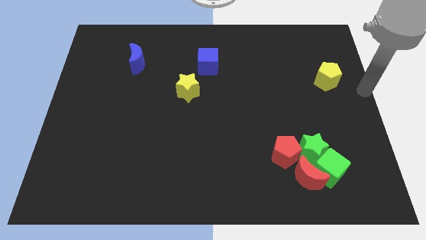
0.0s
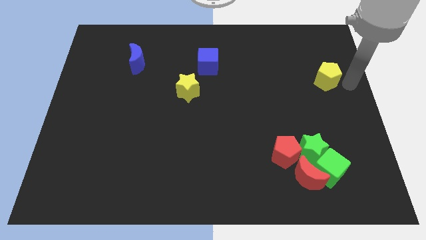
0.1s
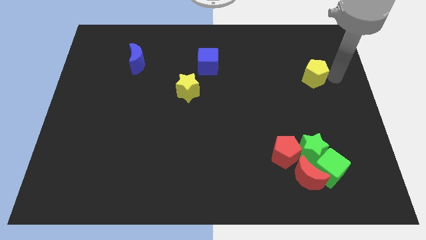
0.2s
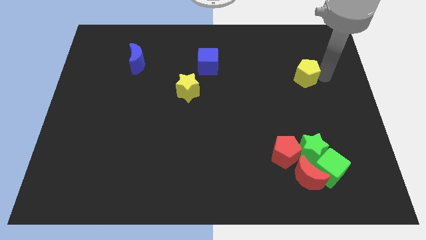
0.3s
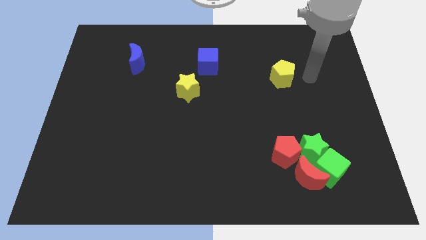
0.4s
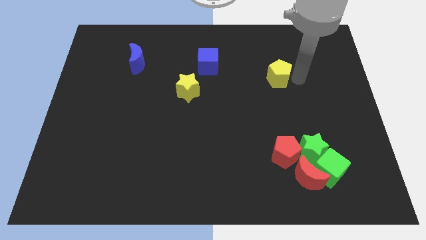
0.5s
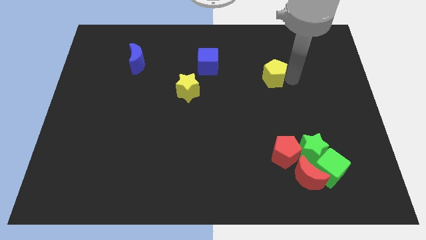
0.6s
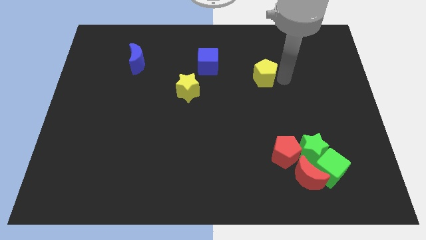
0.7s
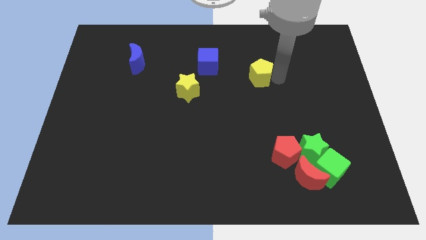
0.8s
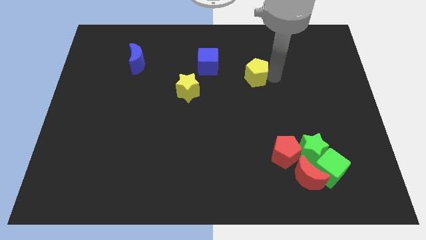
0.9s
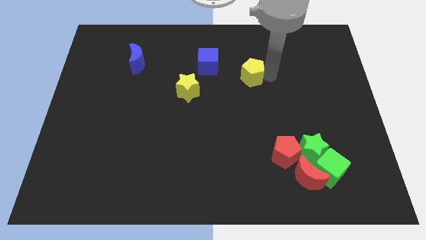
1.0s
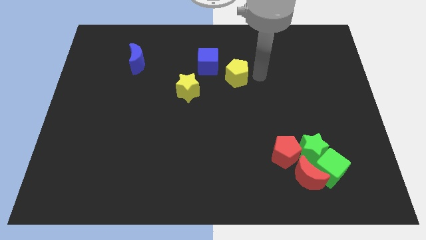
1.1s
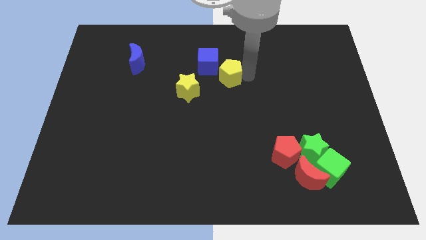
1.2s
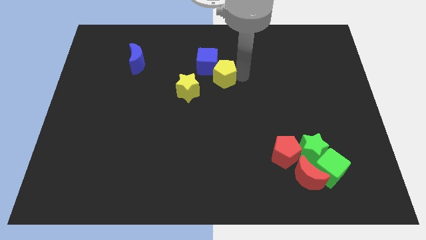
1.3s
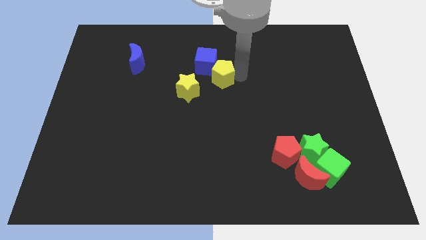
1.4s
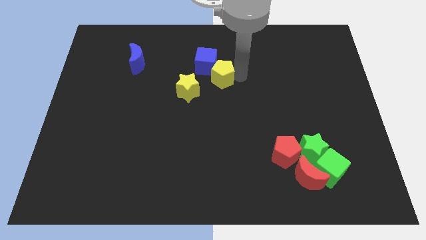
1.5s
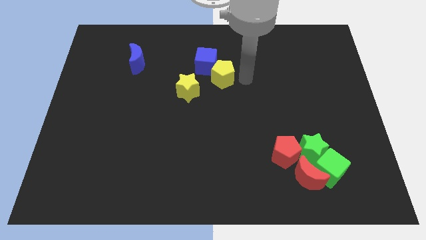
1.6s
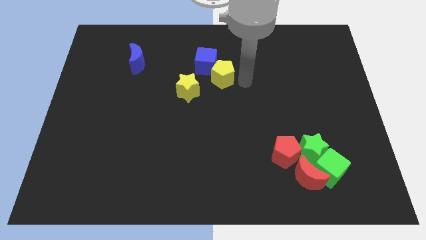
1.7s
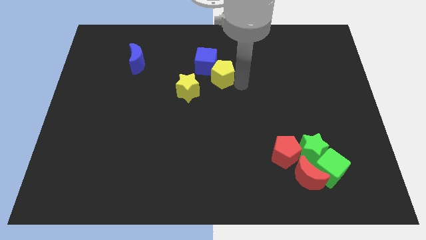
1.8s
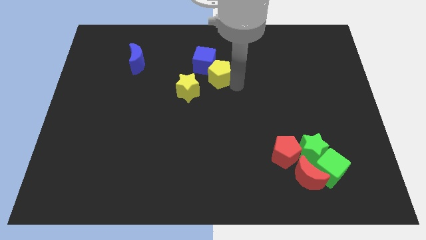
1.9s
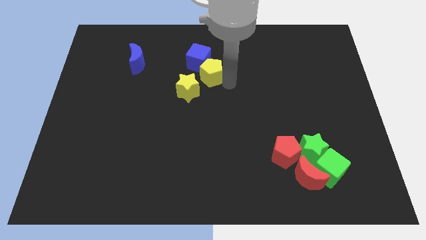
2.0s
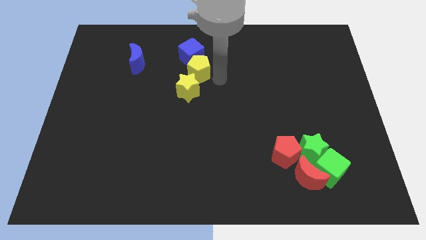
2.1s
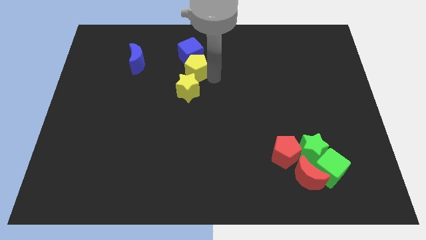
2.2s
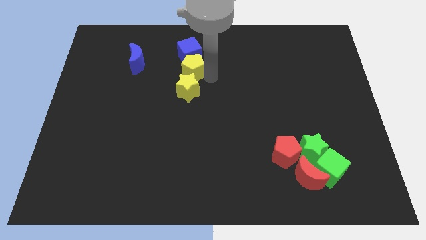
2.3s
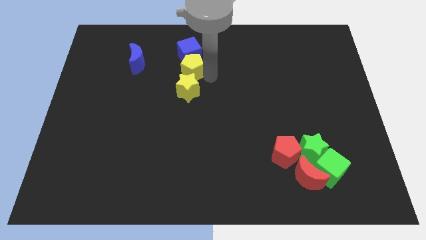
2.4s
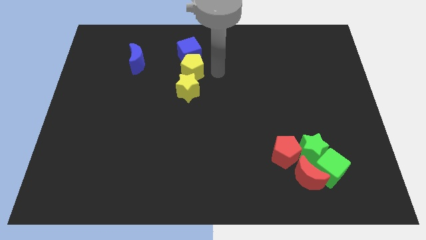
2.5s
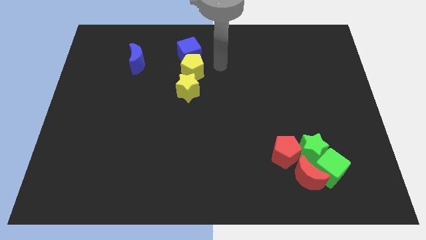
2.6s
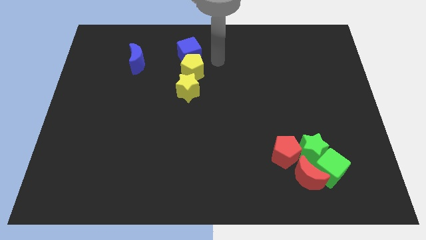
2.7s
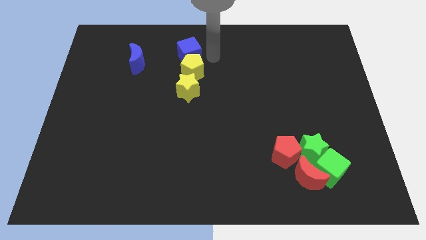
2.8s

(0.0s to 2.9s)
place the yellow pentagon in between the yellow star and the blue cube

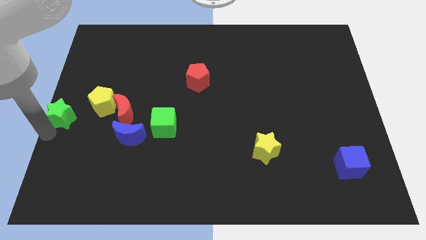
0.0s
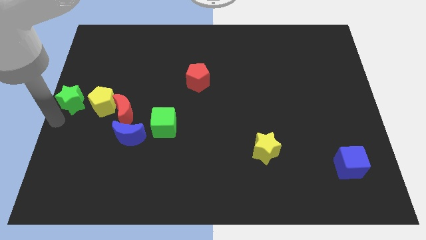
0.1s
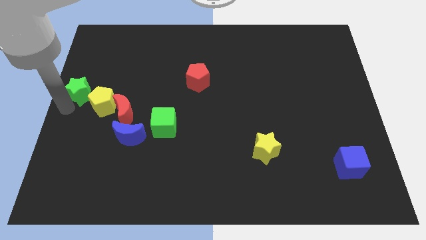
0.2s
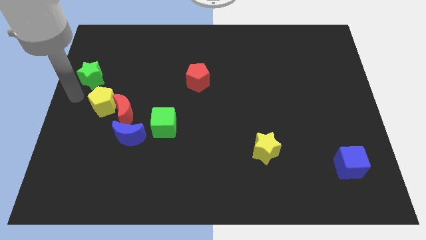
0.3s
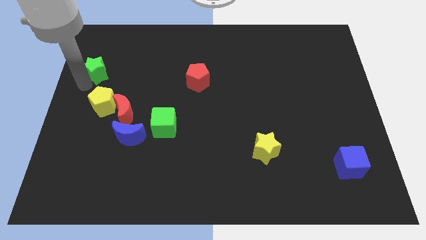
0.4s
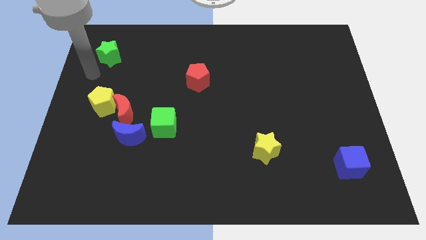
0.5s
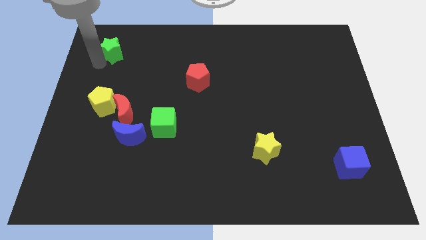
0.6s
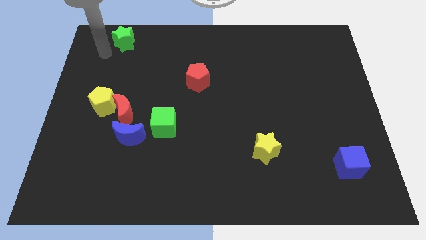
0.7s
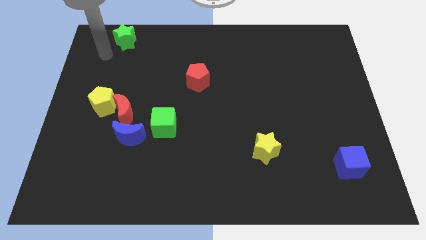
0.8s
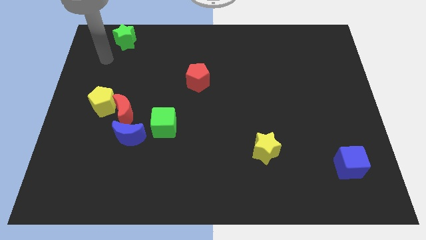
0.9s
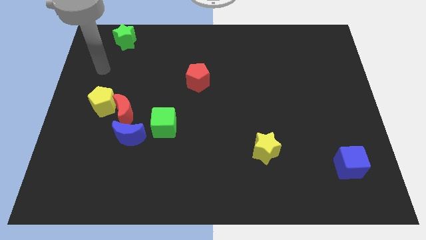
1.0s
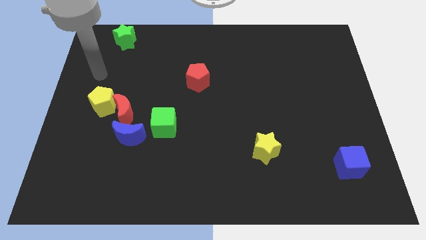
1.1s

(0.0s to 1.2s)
slide green star to top left corner

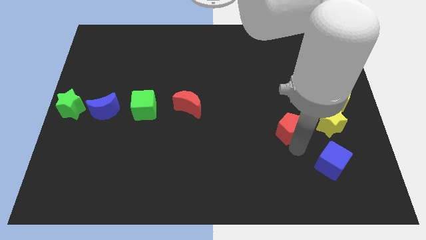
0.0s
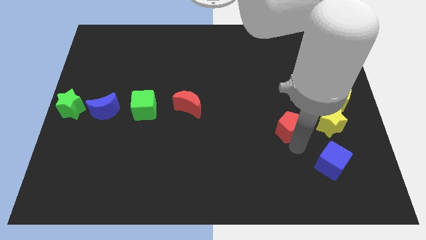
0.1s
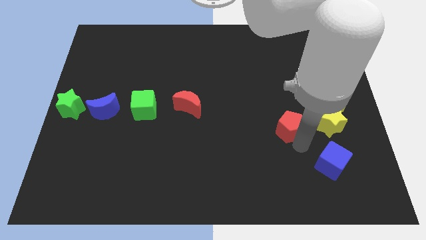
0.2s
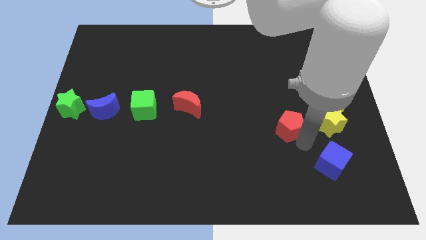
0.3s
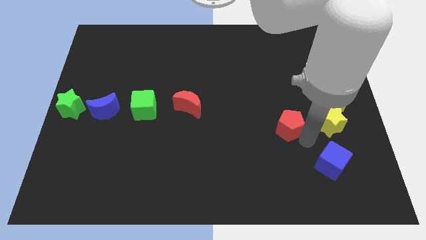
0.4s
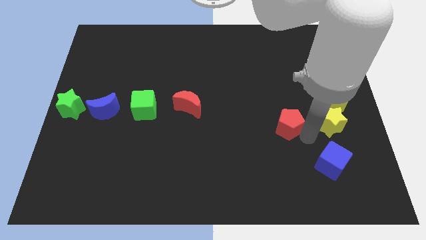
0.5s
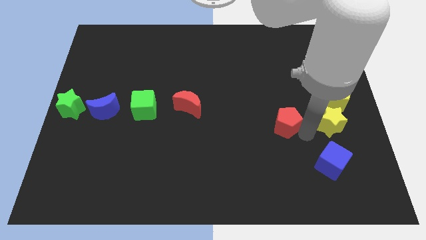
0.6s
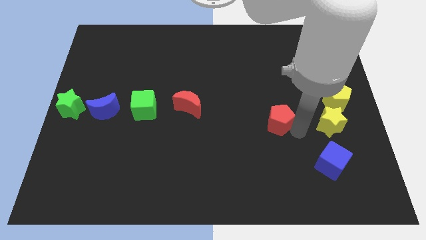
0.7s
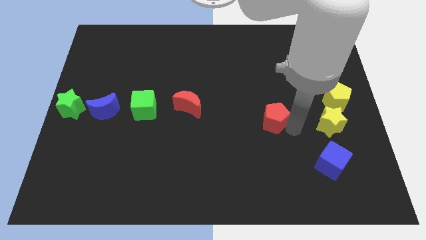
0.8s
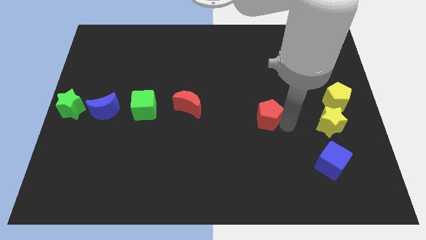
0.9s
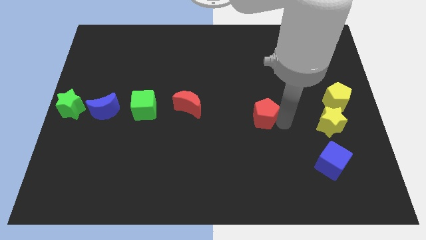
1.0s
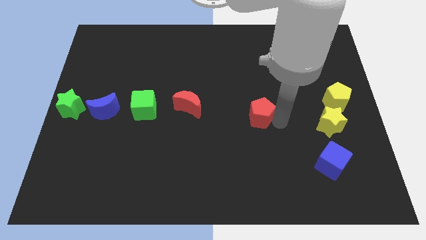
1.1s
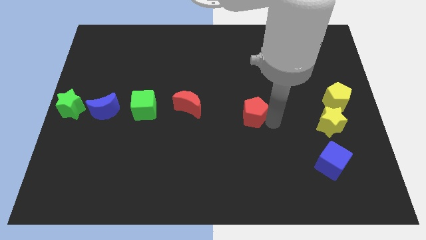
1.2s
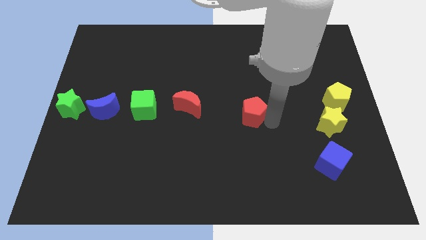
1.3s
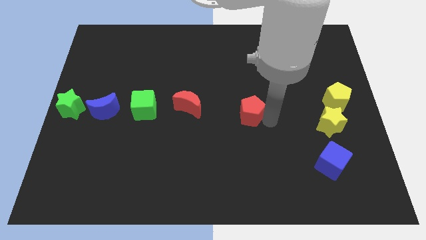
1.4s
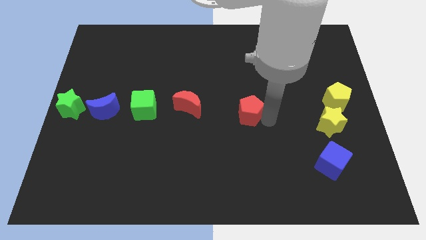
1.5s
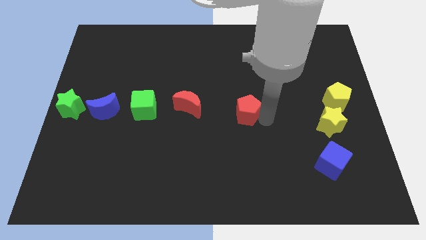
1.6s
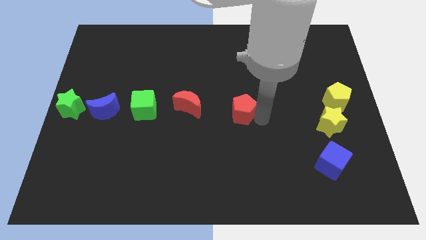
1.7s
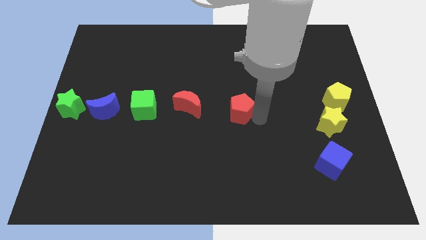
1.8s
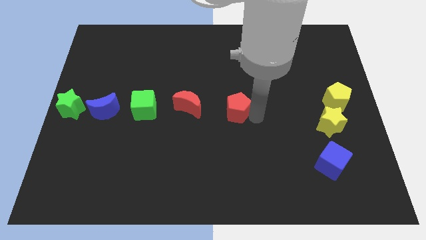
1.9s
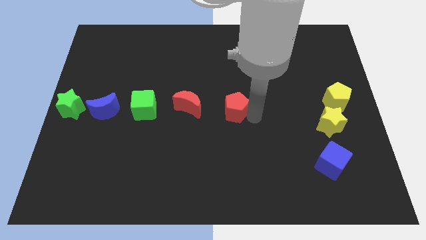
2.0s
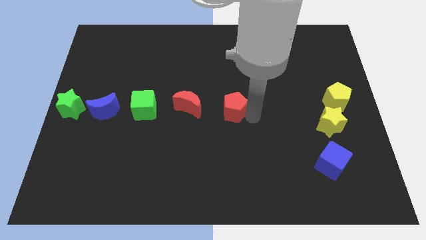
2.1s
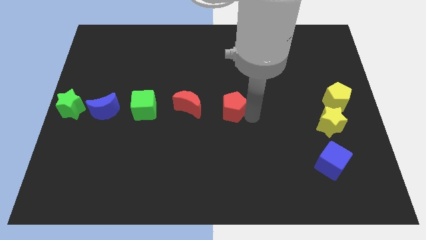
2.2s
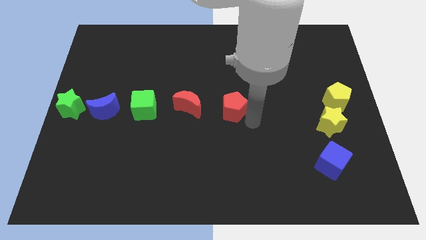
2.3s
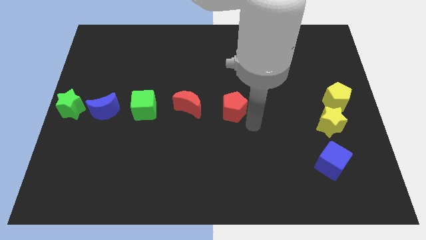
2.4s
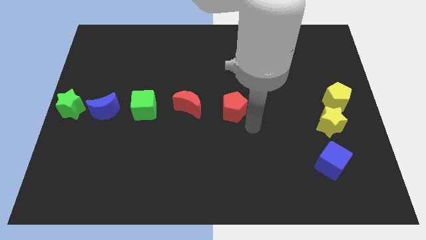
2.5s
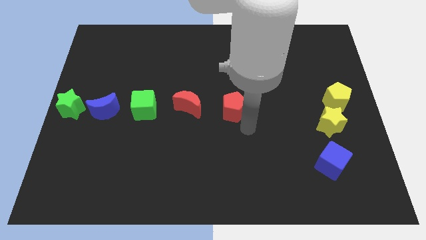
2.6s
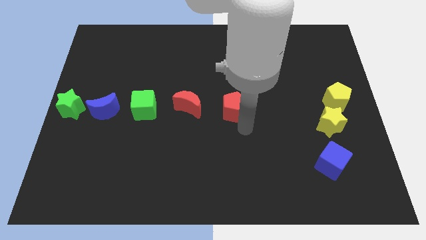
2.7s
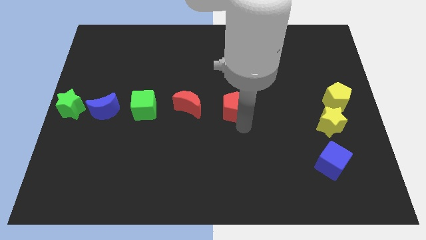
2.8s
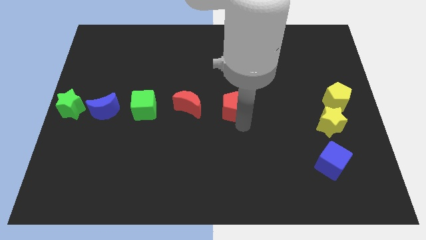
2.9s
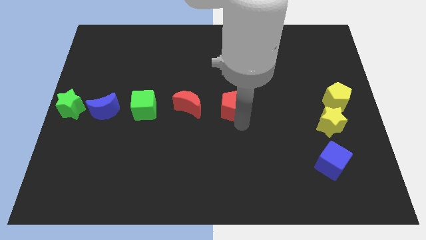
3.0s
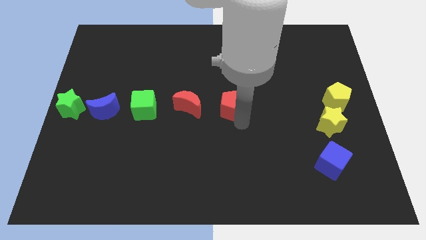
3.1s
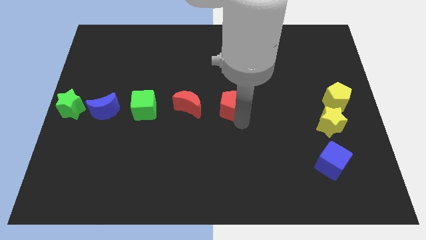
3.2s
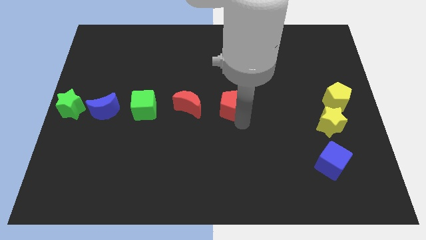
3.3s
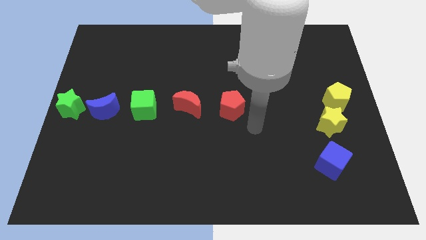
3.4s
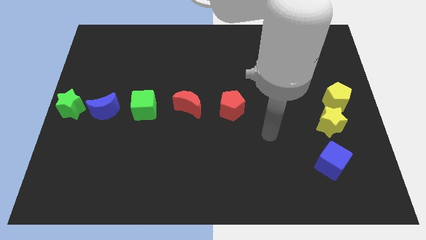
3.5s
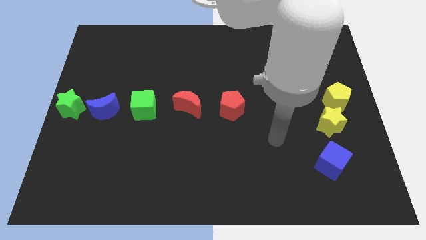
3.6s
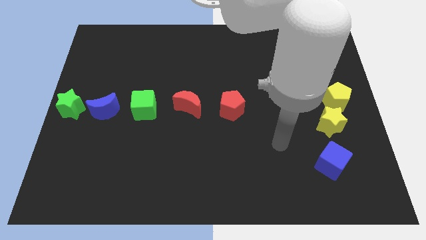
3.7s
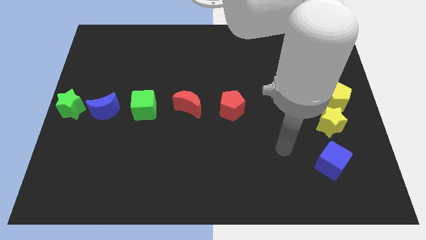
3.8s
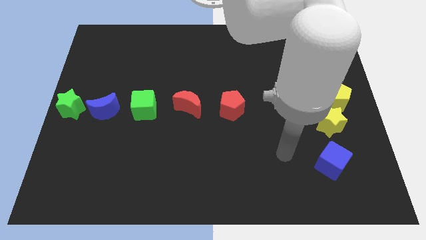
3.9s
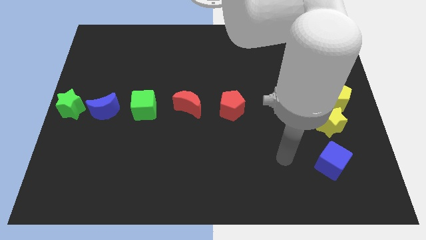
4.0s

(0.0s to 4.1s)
place the red pentagon to the right of the red moon

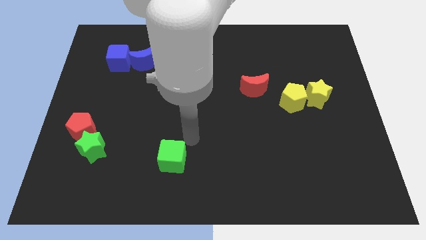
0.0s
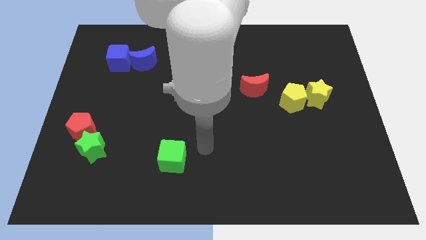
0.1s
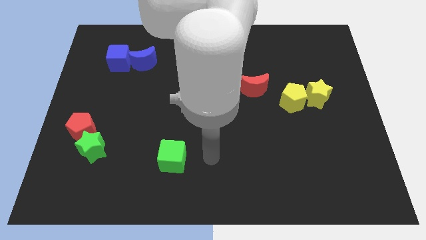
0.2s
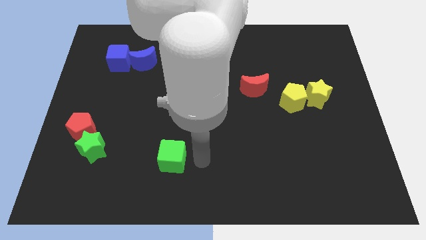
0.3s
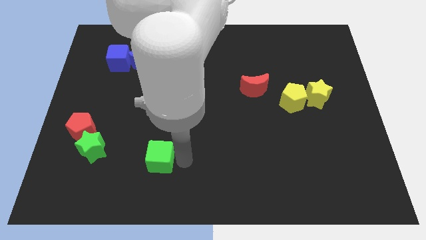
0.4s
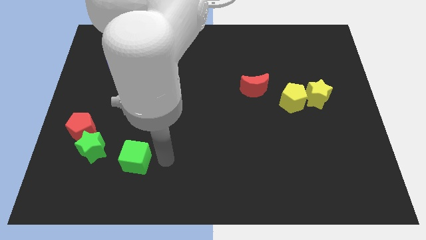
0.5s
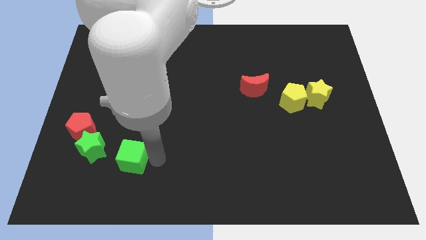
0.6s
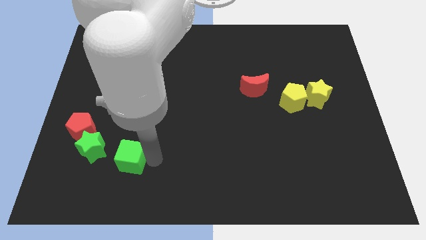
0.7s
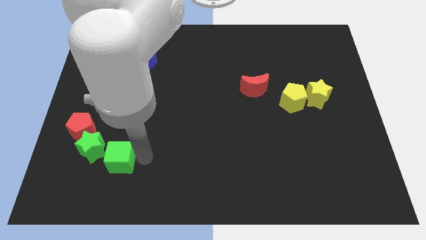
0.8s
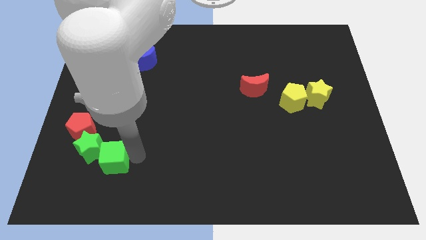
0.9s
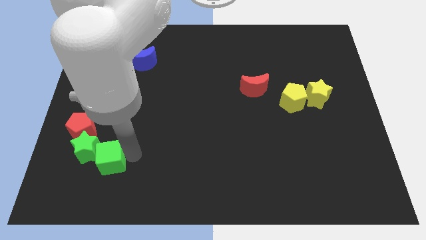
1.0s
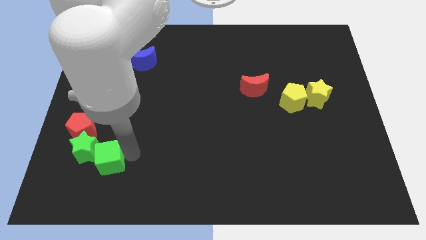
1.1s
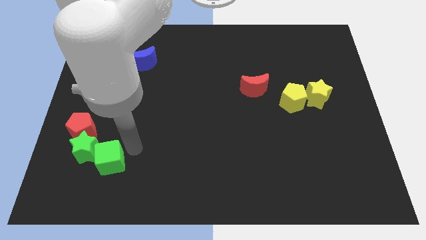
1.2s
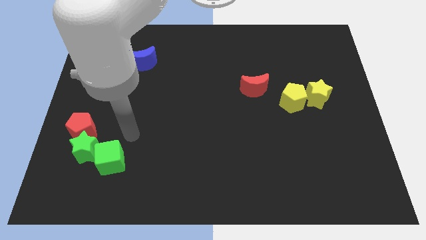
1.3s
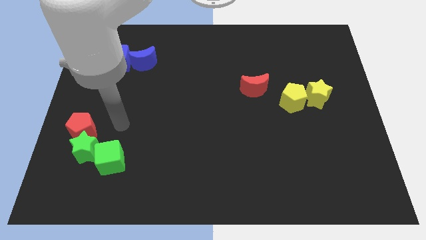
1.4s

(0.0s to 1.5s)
move the green cube into the green star
